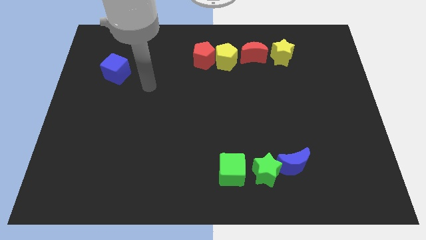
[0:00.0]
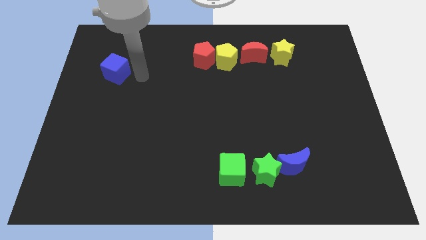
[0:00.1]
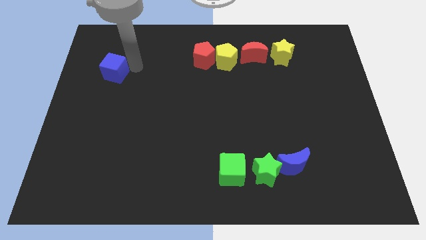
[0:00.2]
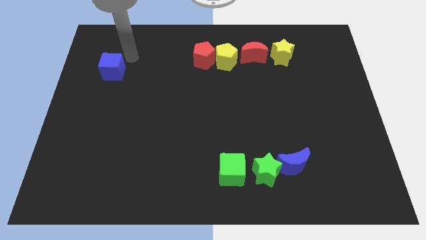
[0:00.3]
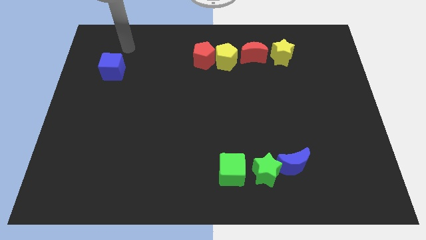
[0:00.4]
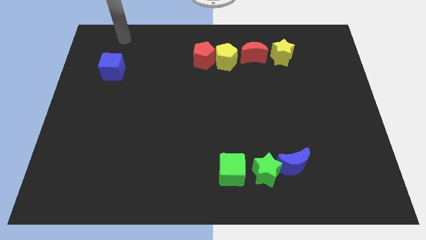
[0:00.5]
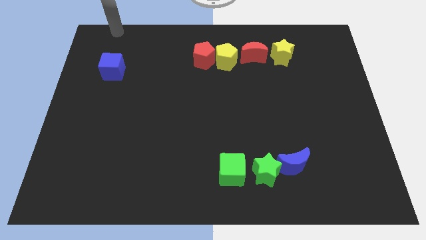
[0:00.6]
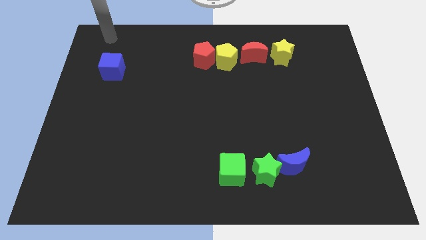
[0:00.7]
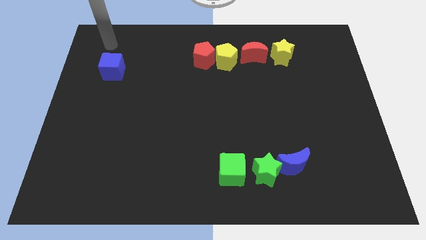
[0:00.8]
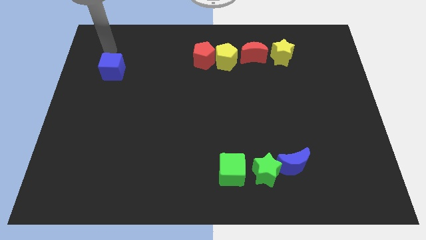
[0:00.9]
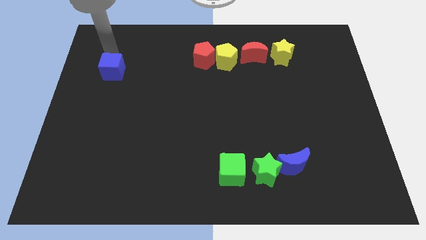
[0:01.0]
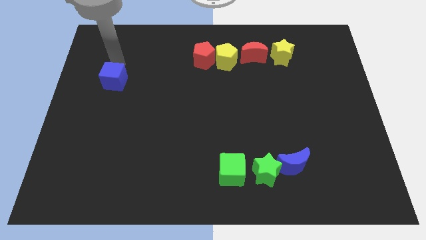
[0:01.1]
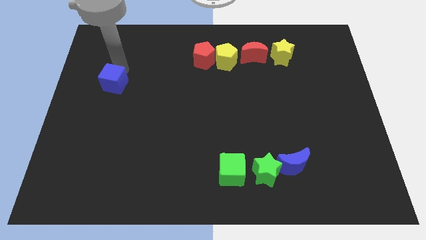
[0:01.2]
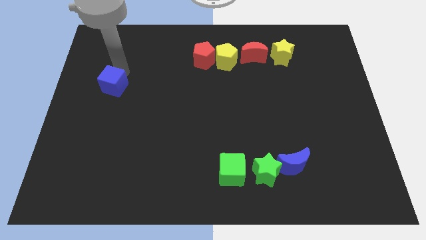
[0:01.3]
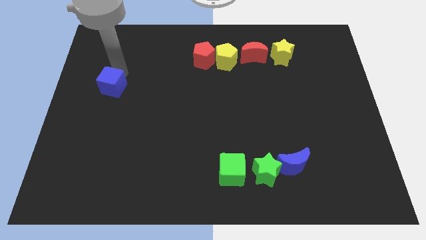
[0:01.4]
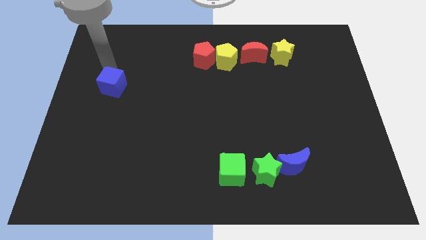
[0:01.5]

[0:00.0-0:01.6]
push the blue cube slightly downwards

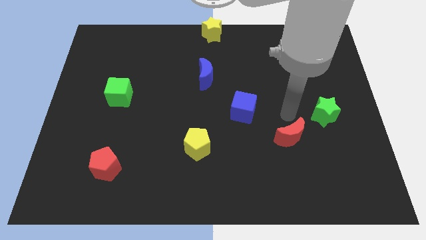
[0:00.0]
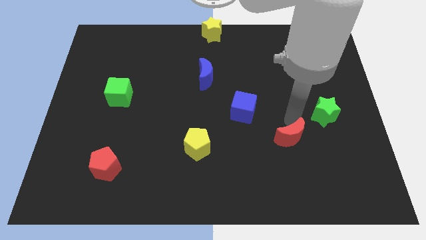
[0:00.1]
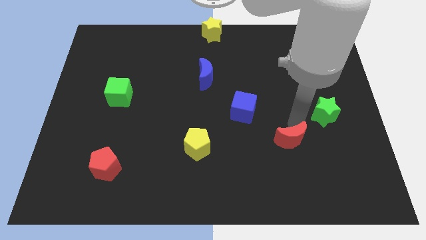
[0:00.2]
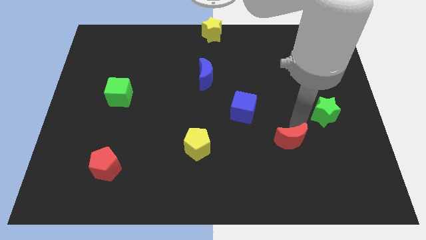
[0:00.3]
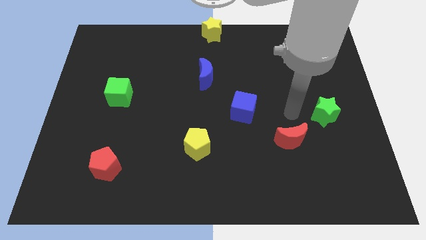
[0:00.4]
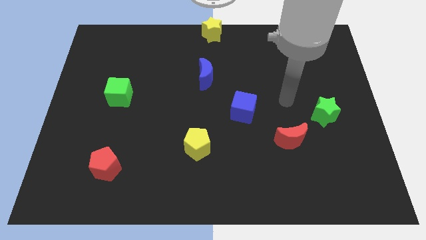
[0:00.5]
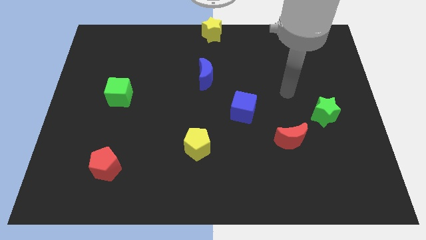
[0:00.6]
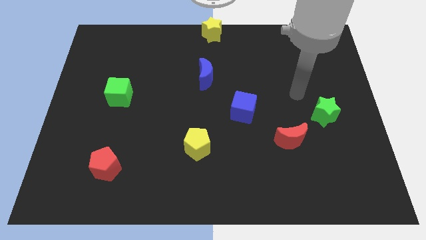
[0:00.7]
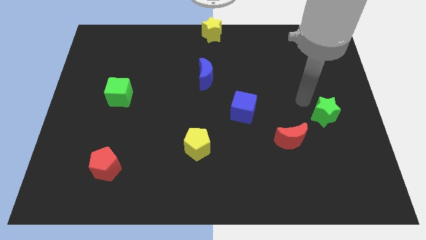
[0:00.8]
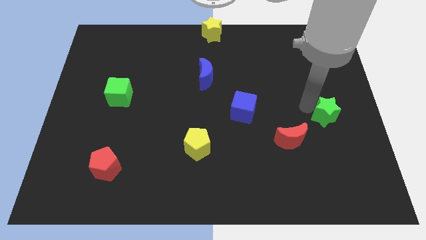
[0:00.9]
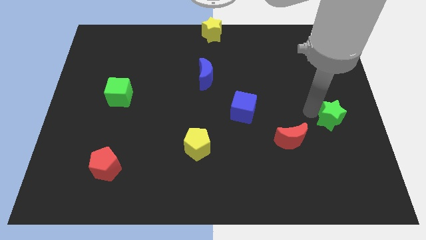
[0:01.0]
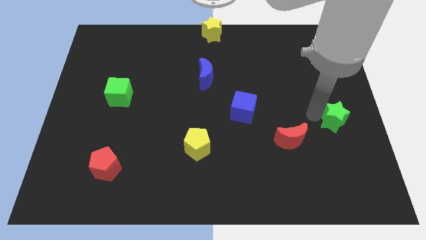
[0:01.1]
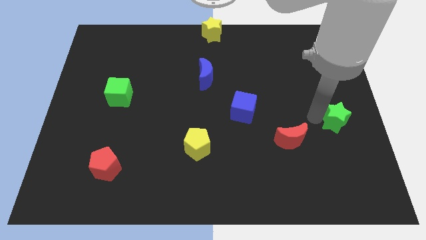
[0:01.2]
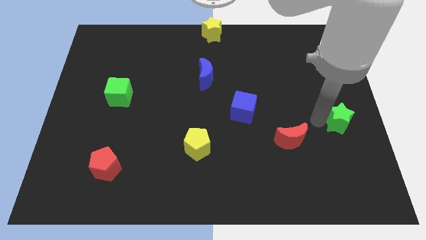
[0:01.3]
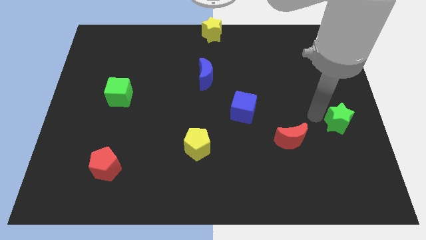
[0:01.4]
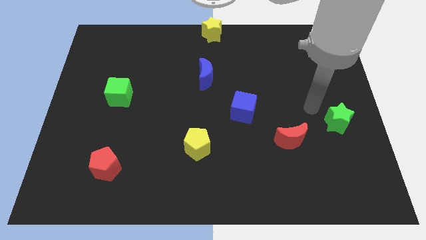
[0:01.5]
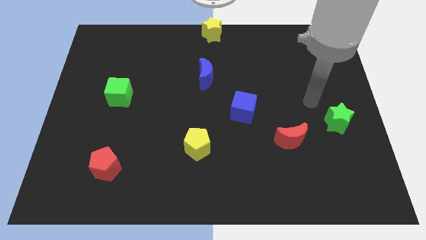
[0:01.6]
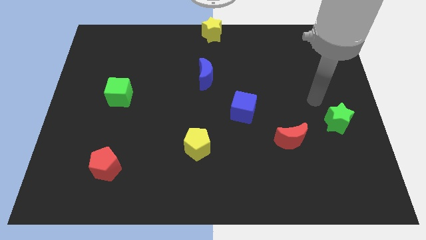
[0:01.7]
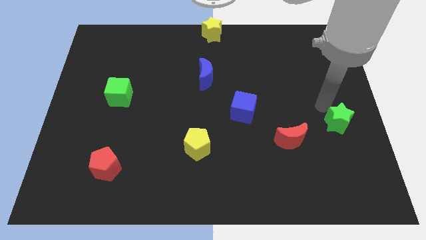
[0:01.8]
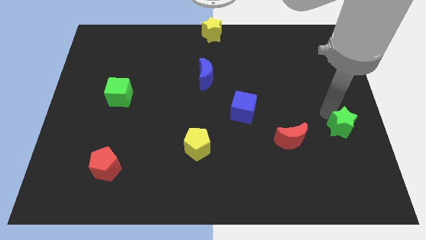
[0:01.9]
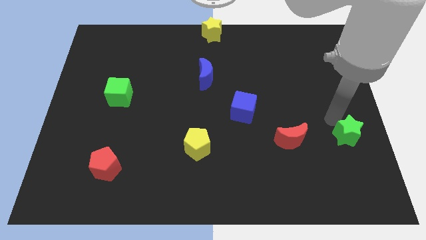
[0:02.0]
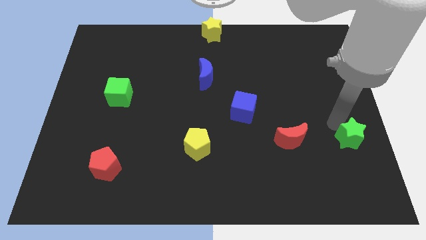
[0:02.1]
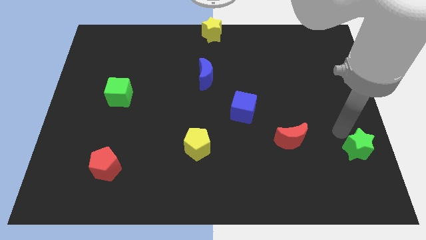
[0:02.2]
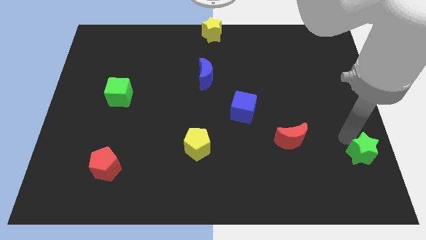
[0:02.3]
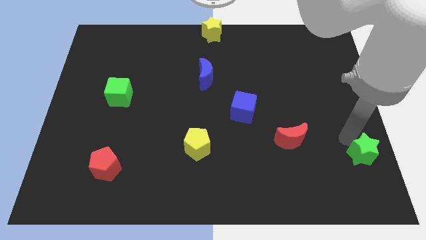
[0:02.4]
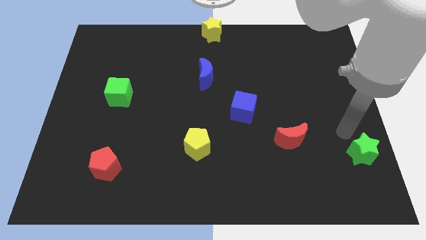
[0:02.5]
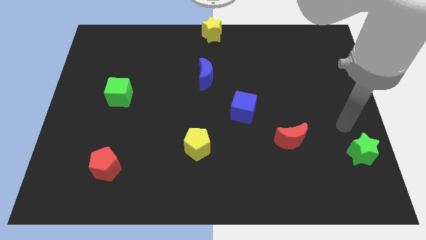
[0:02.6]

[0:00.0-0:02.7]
place the green star to the right of the red pentagon

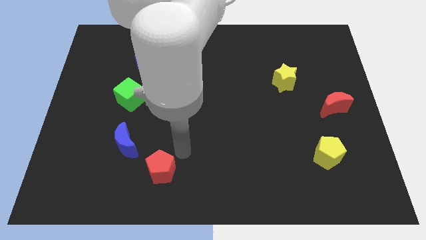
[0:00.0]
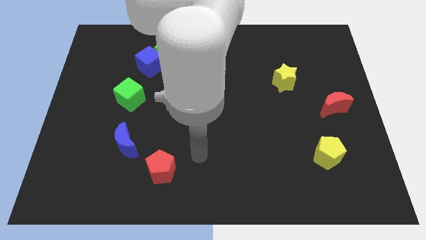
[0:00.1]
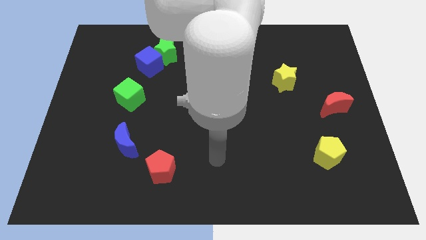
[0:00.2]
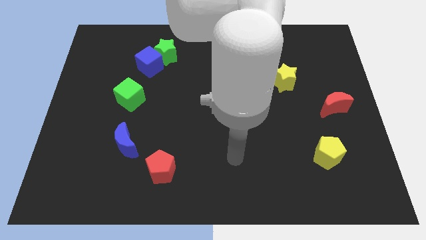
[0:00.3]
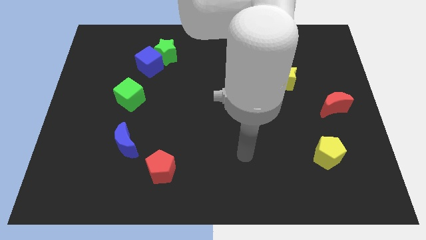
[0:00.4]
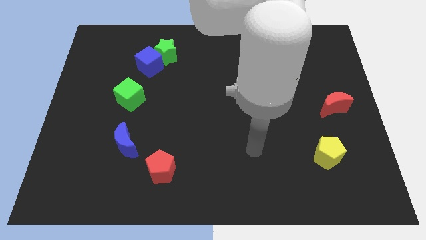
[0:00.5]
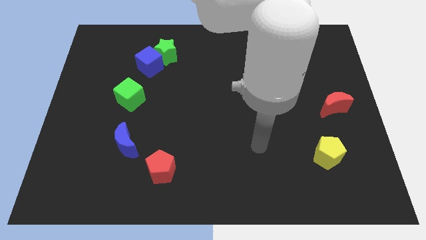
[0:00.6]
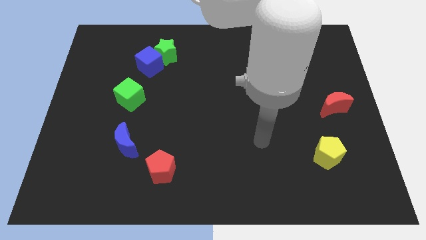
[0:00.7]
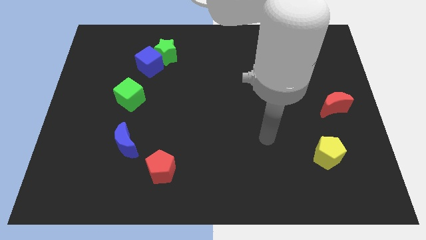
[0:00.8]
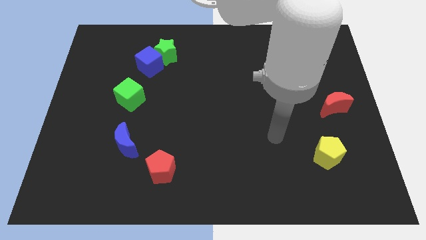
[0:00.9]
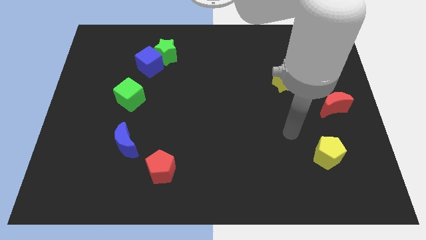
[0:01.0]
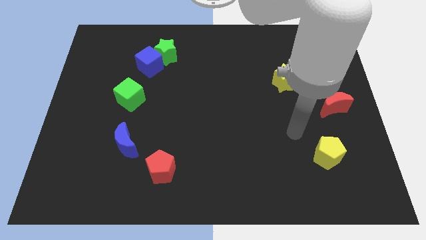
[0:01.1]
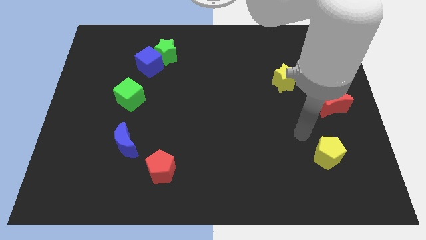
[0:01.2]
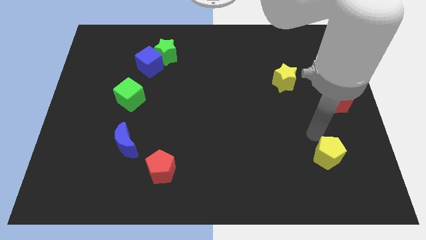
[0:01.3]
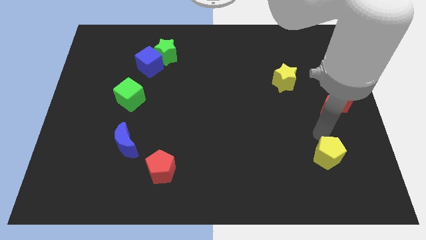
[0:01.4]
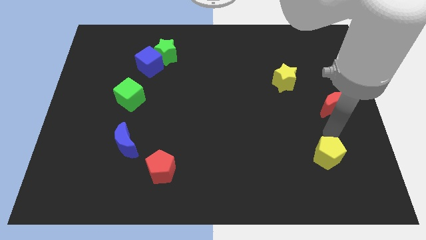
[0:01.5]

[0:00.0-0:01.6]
point your hand at the top side of the yellow pentagon

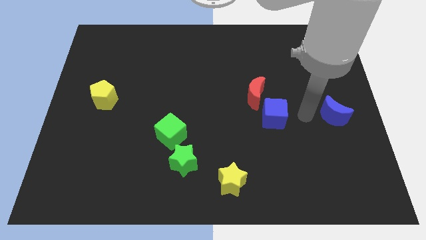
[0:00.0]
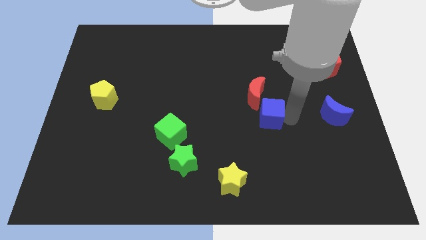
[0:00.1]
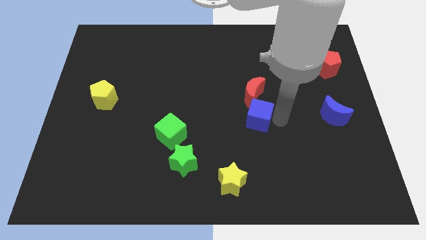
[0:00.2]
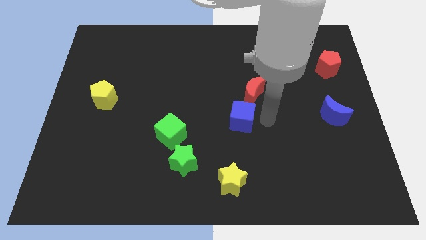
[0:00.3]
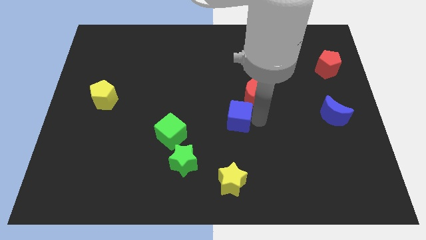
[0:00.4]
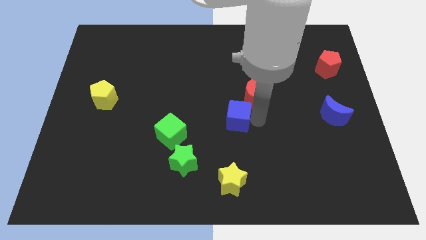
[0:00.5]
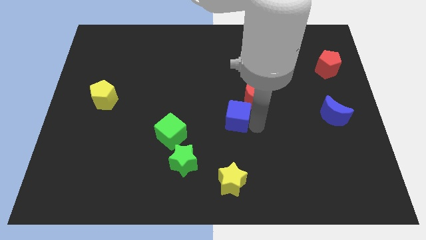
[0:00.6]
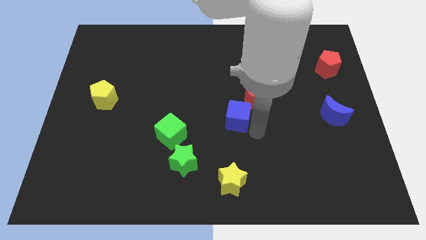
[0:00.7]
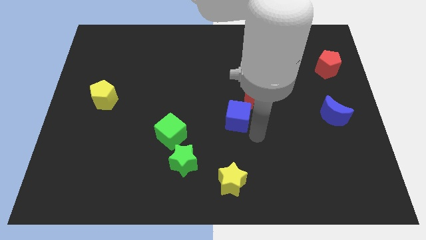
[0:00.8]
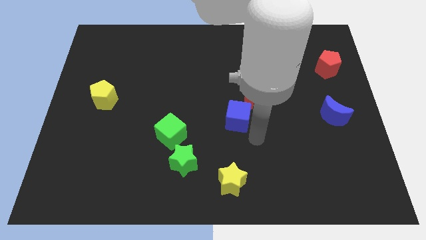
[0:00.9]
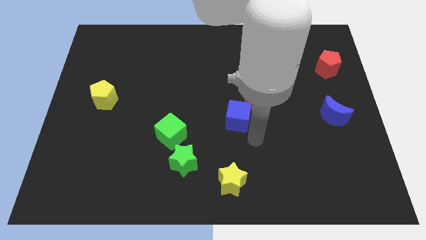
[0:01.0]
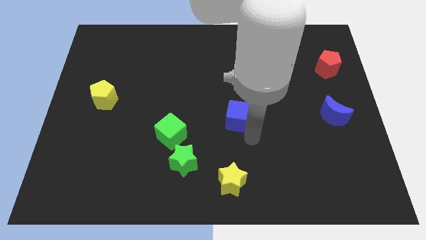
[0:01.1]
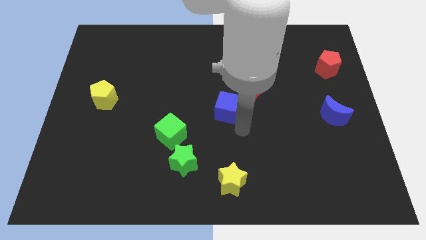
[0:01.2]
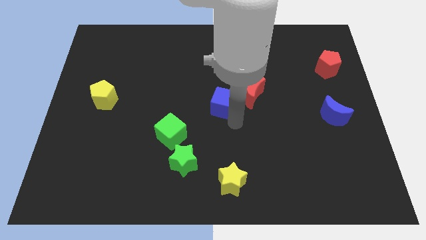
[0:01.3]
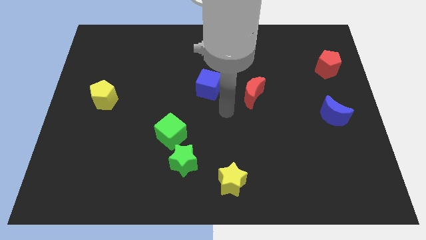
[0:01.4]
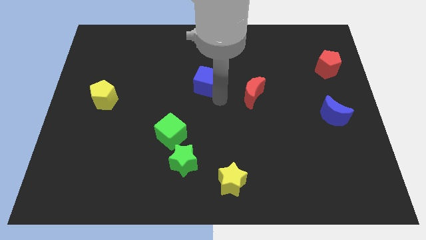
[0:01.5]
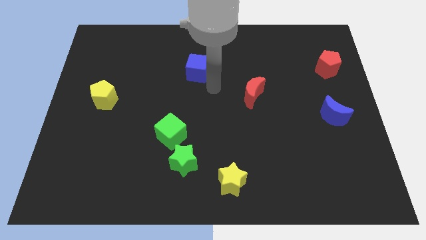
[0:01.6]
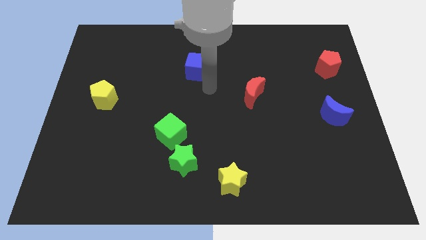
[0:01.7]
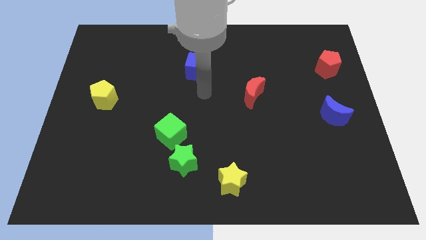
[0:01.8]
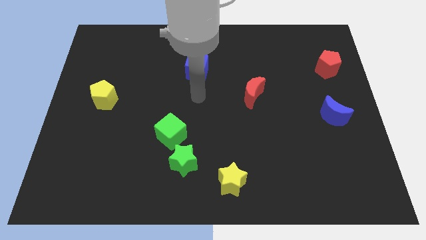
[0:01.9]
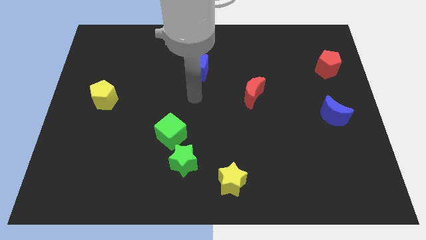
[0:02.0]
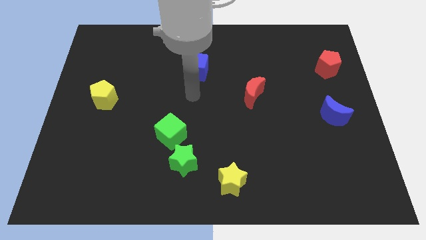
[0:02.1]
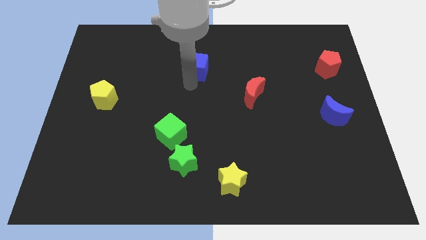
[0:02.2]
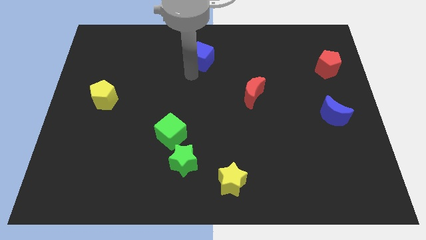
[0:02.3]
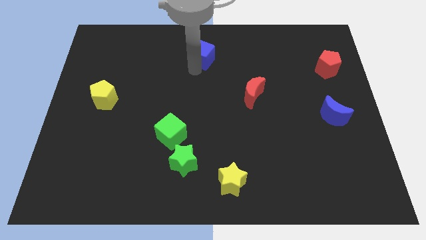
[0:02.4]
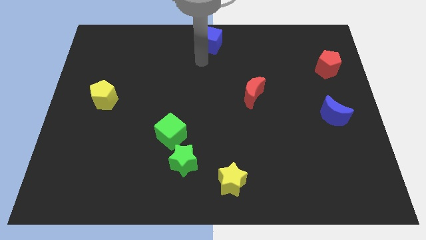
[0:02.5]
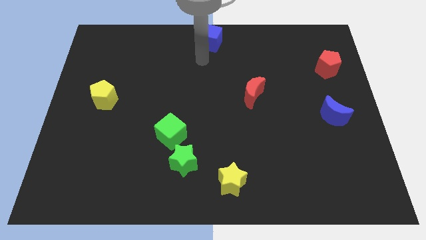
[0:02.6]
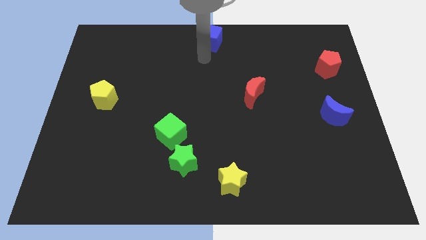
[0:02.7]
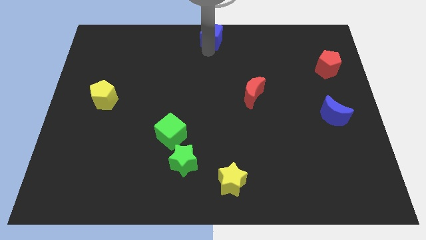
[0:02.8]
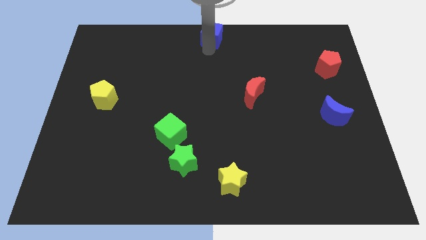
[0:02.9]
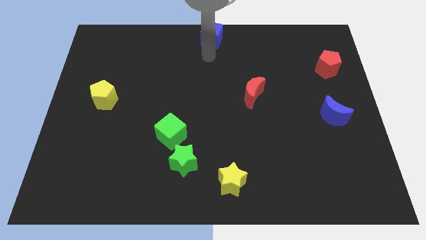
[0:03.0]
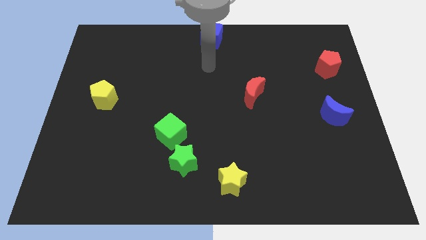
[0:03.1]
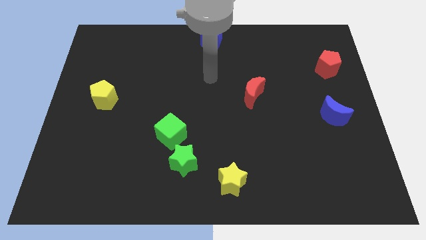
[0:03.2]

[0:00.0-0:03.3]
put the blue cube at the top center of the board
